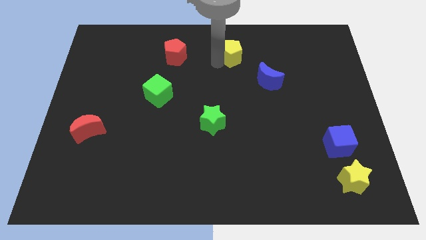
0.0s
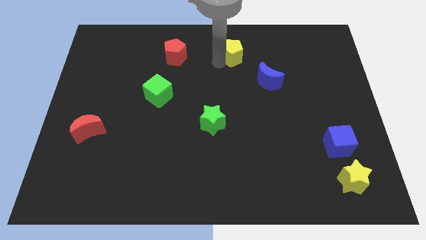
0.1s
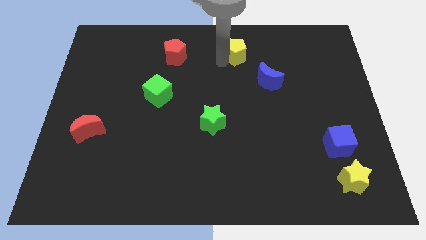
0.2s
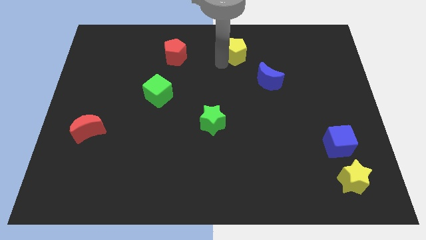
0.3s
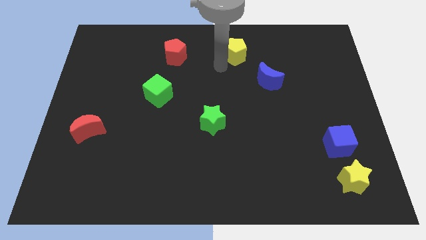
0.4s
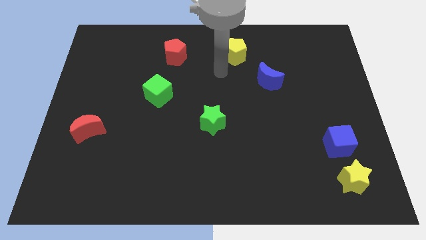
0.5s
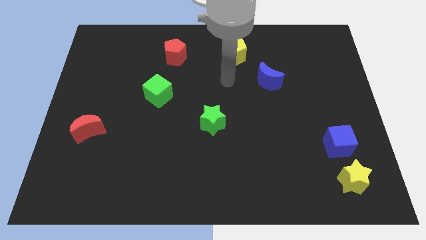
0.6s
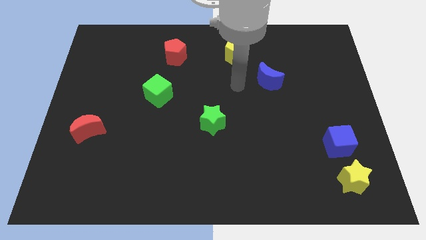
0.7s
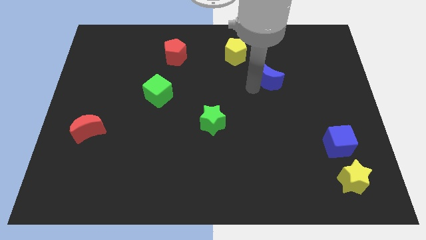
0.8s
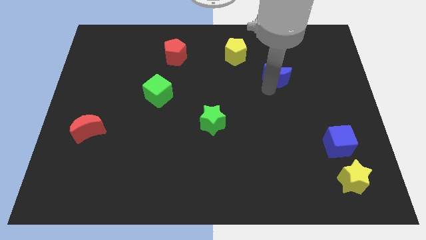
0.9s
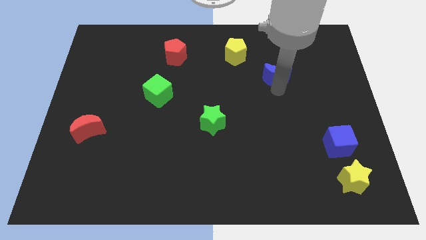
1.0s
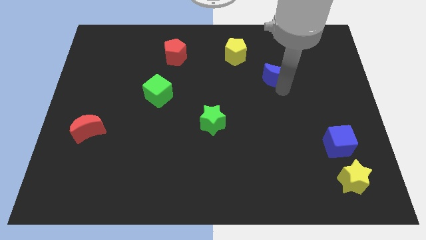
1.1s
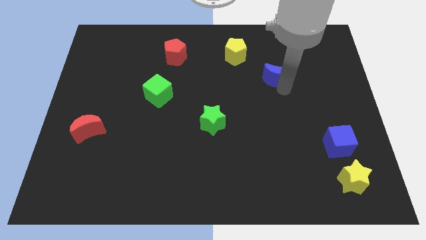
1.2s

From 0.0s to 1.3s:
point your arm at the bottom of the blue crescent

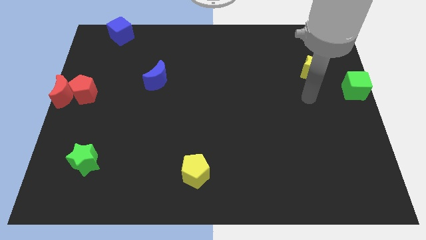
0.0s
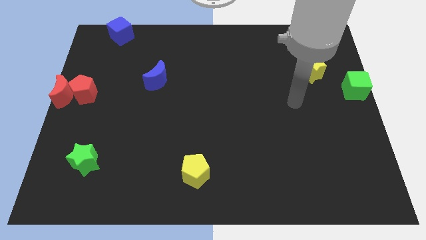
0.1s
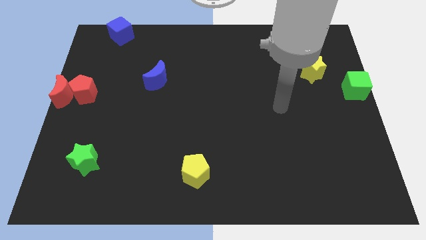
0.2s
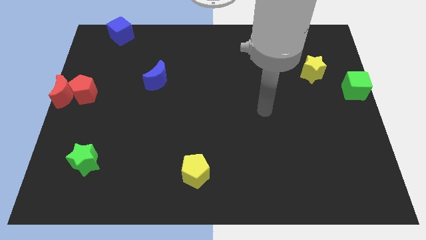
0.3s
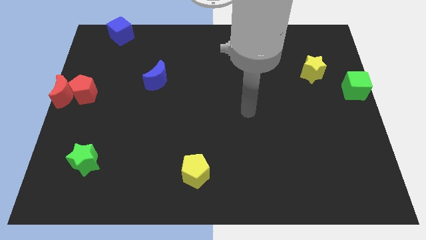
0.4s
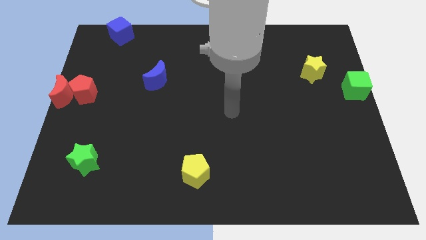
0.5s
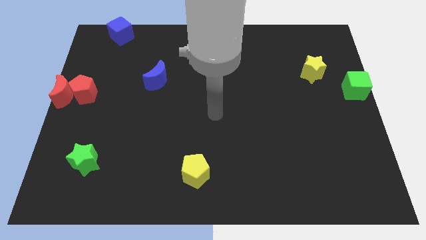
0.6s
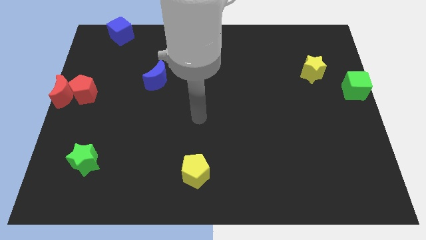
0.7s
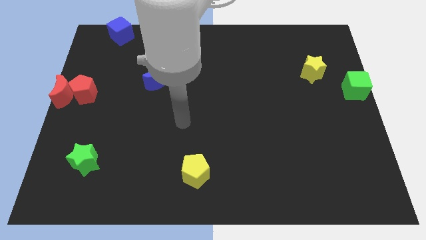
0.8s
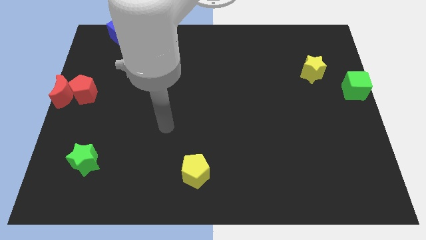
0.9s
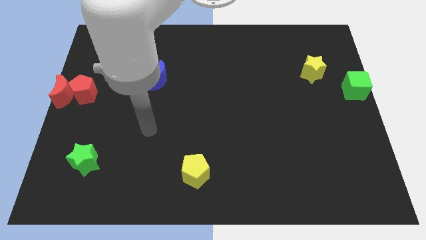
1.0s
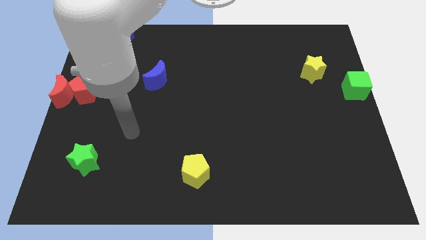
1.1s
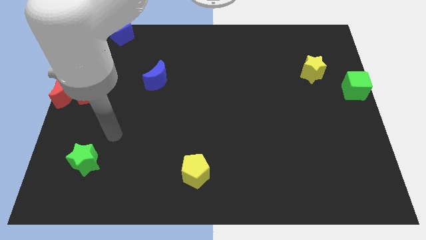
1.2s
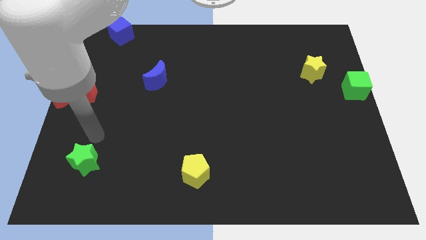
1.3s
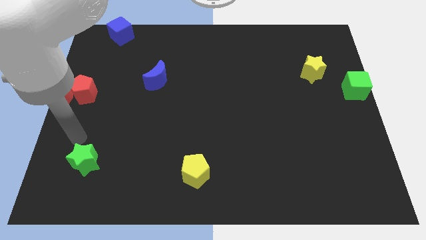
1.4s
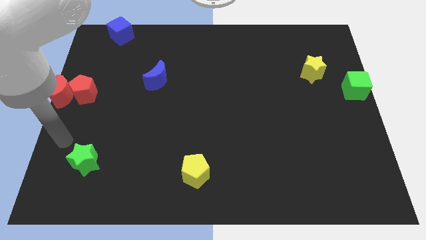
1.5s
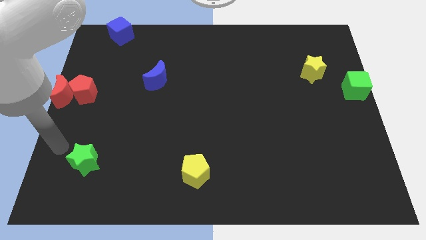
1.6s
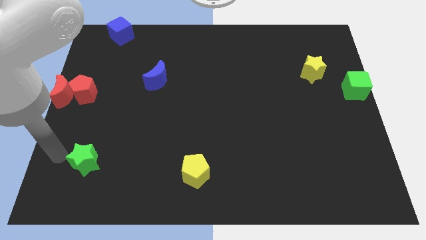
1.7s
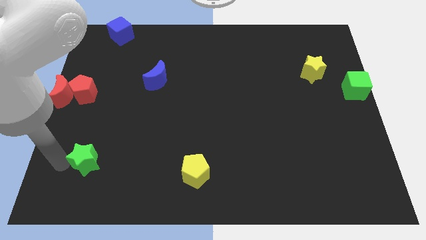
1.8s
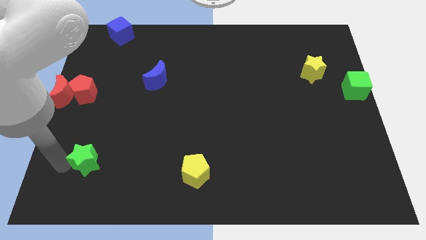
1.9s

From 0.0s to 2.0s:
go away from the green cube

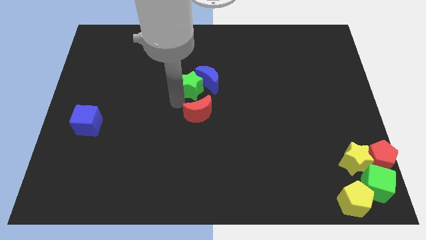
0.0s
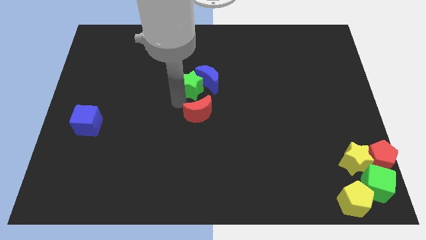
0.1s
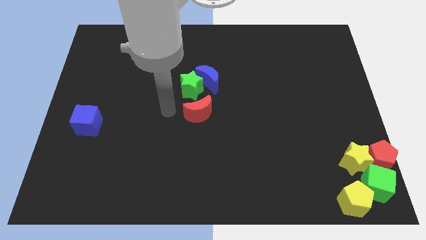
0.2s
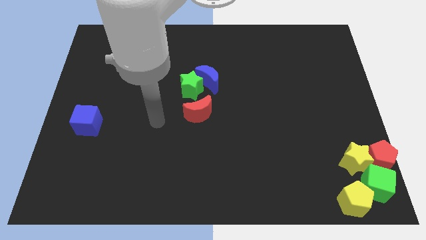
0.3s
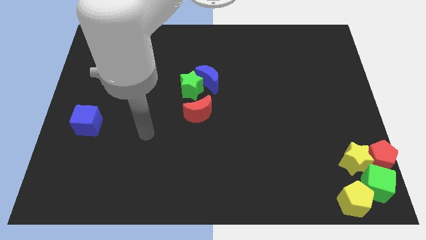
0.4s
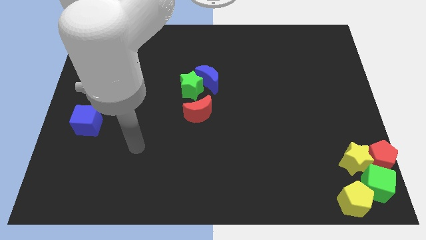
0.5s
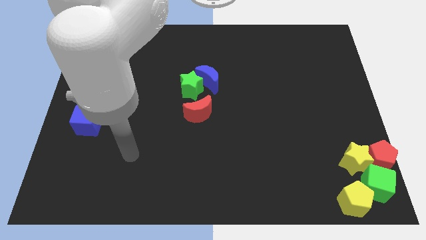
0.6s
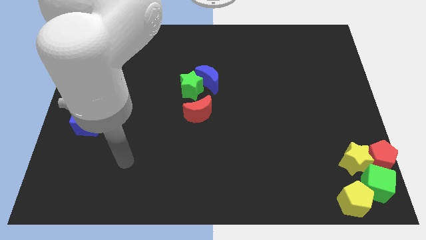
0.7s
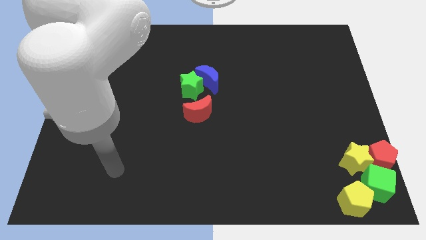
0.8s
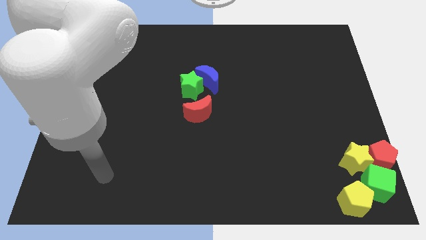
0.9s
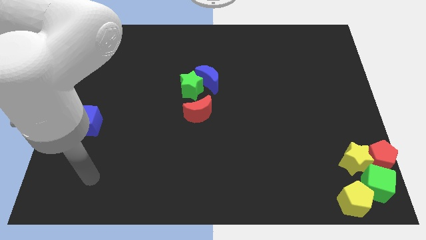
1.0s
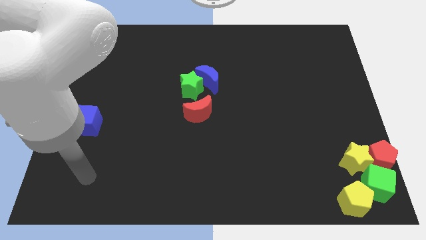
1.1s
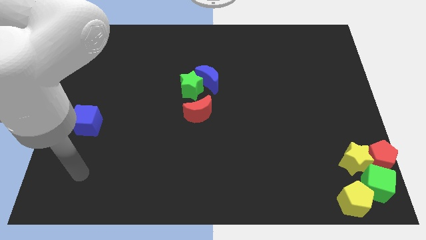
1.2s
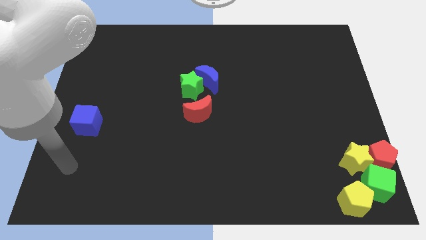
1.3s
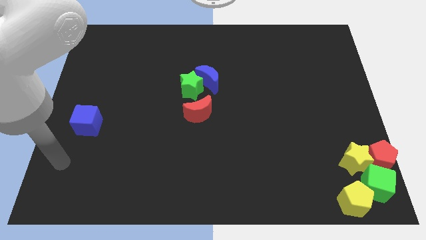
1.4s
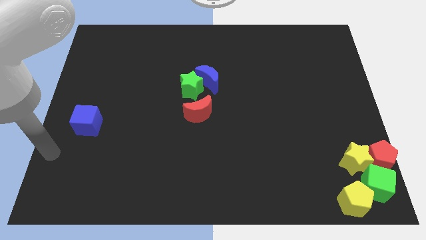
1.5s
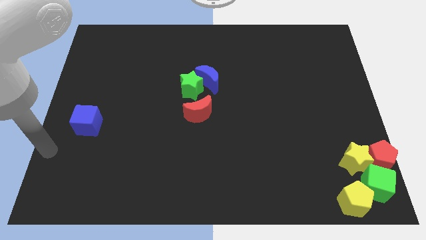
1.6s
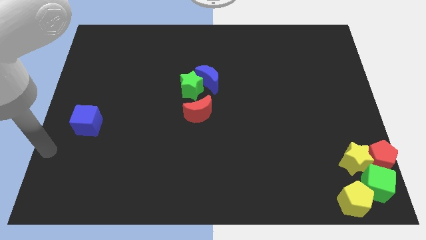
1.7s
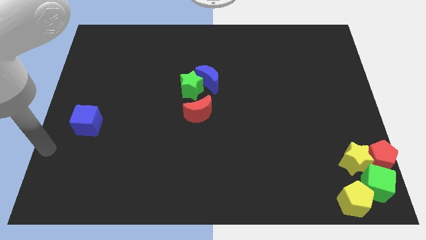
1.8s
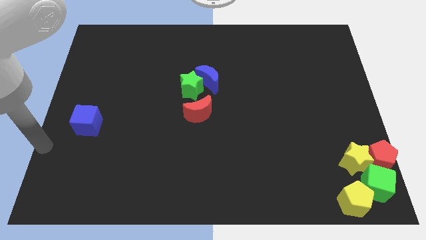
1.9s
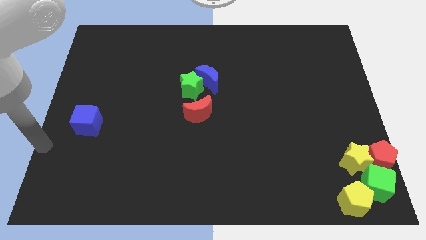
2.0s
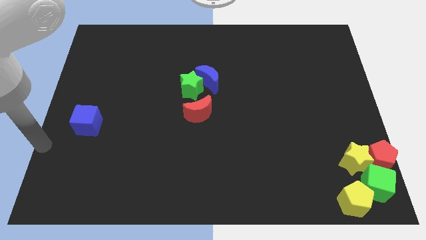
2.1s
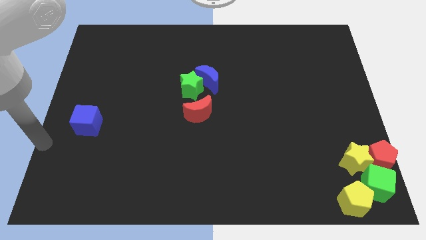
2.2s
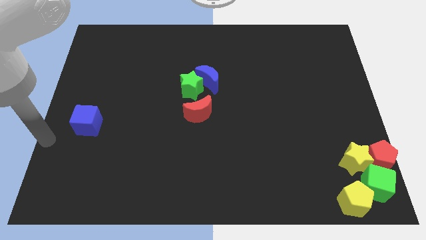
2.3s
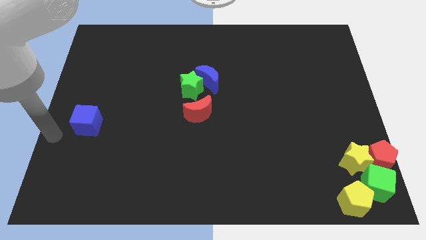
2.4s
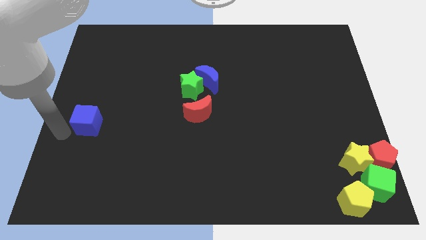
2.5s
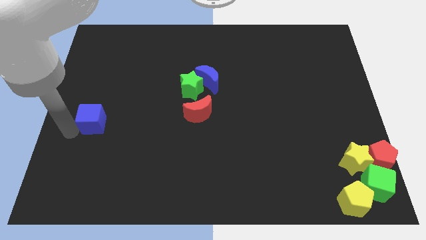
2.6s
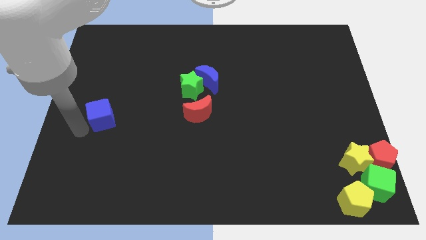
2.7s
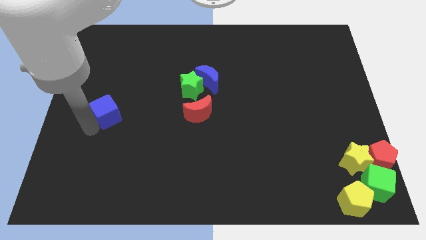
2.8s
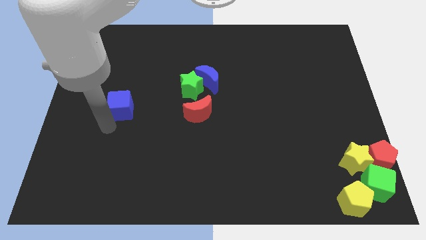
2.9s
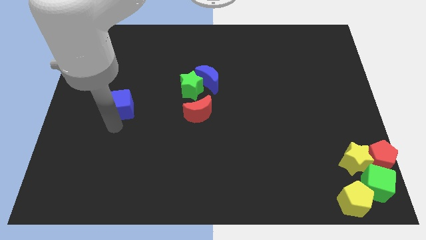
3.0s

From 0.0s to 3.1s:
move the blue cube slightly right

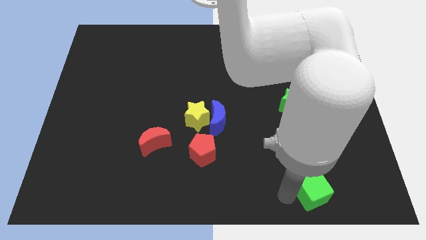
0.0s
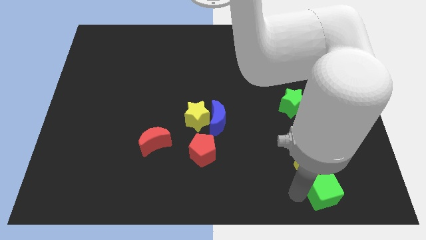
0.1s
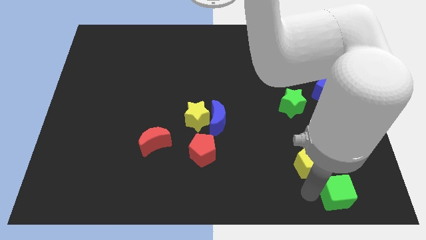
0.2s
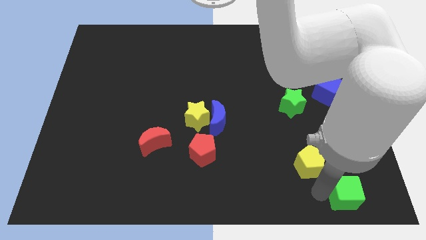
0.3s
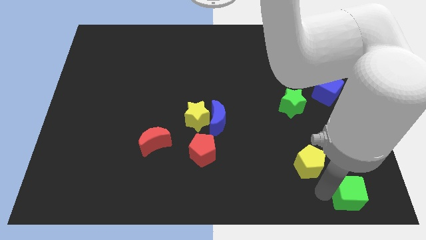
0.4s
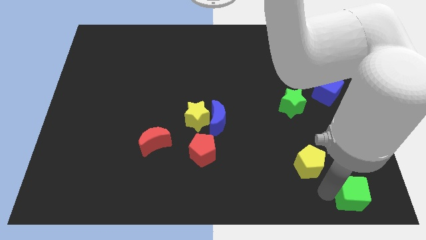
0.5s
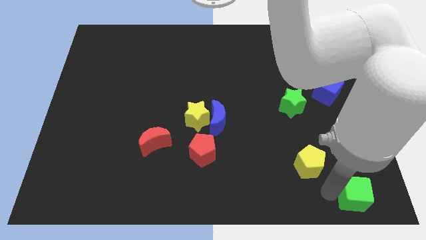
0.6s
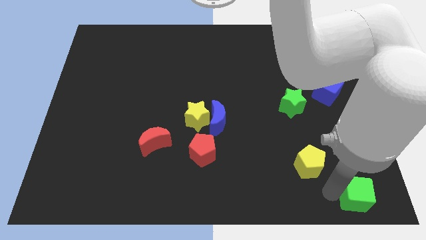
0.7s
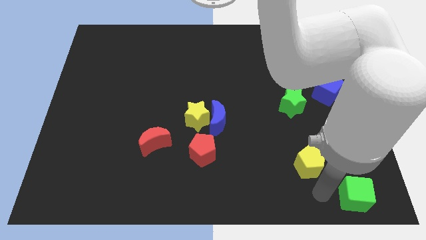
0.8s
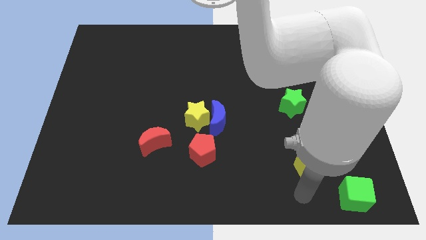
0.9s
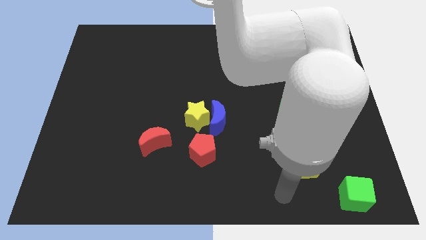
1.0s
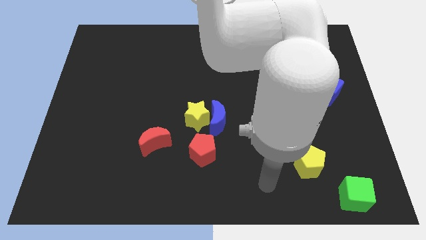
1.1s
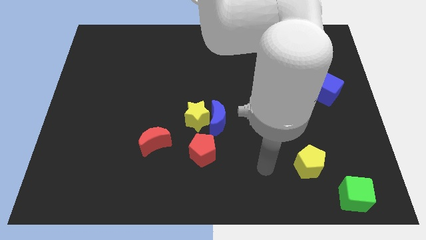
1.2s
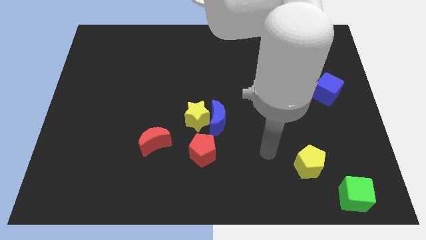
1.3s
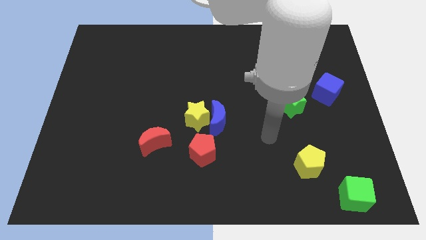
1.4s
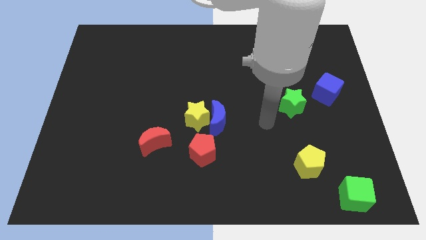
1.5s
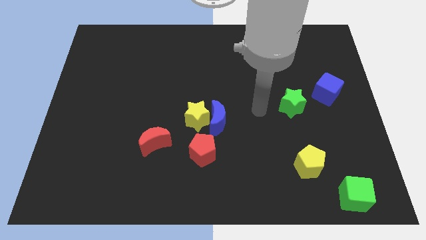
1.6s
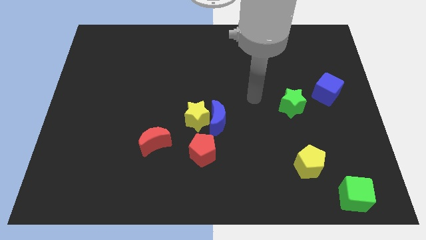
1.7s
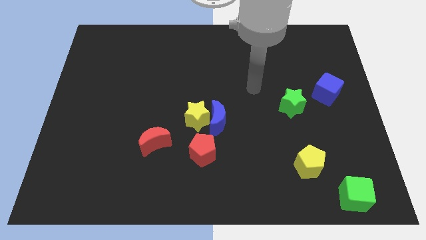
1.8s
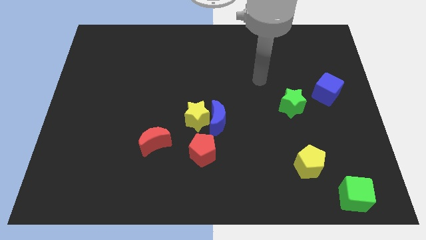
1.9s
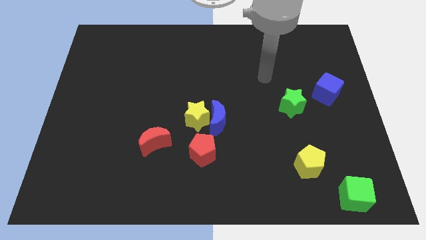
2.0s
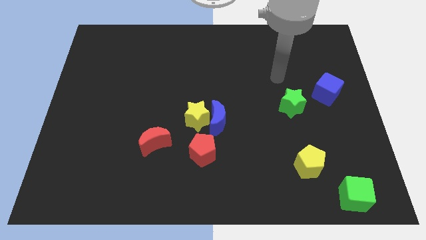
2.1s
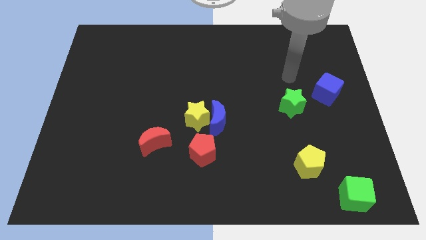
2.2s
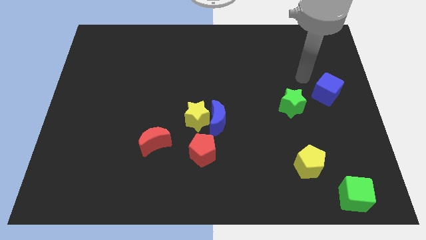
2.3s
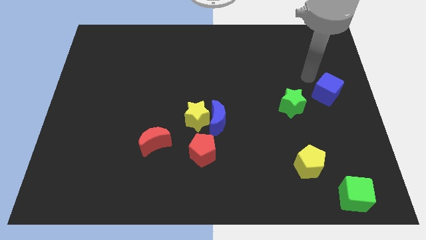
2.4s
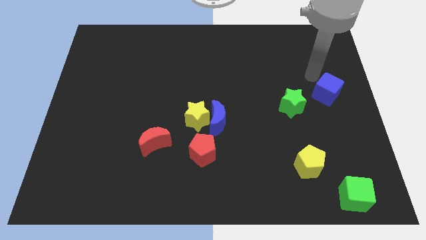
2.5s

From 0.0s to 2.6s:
place the arm near the blue cube
